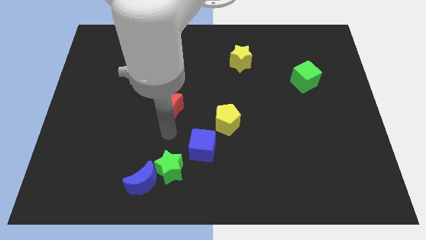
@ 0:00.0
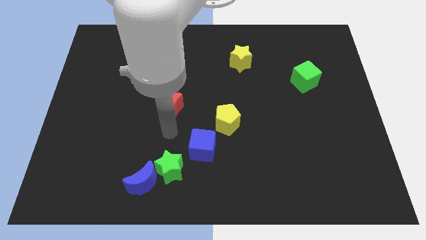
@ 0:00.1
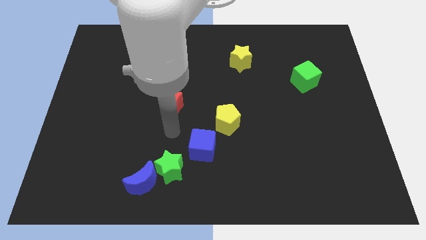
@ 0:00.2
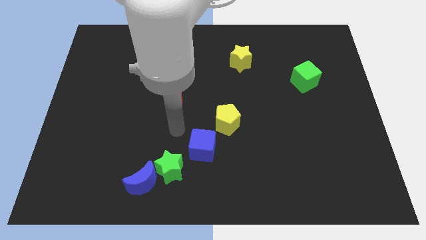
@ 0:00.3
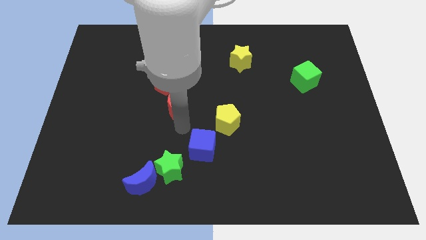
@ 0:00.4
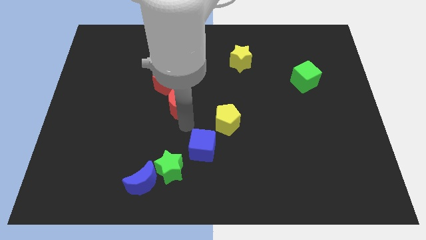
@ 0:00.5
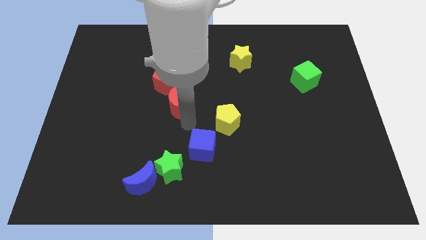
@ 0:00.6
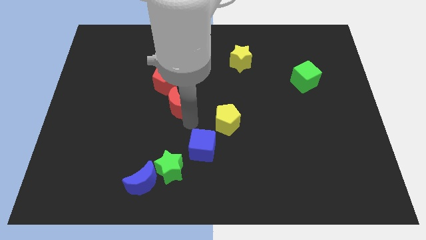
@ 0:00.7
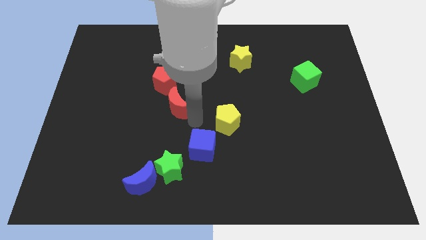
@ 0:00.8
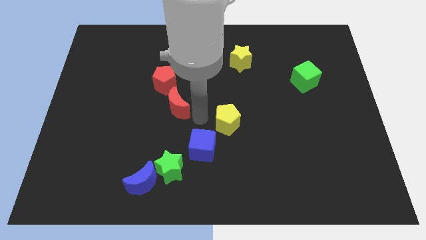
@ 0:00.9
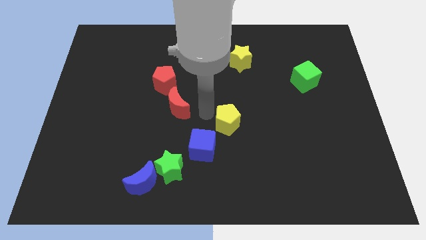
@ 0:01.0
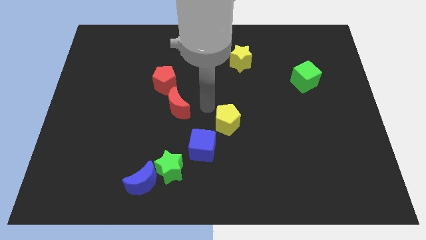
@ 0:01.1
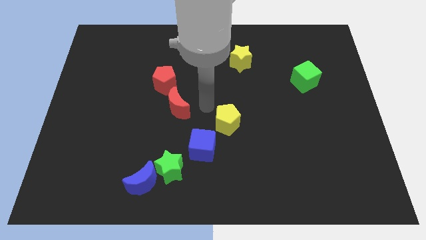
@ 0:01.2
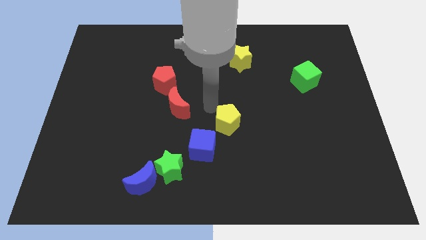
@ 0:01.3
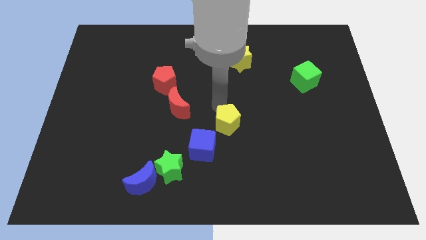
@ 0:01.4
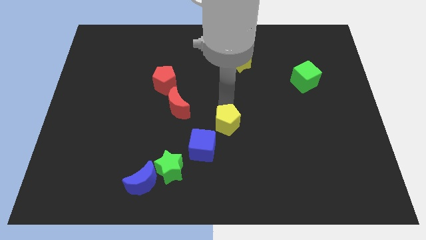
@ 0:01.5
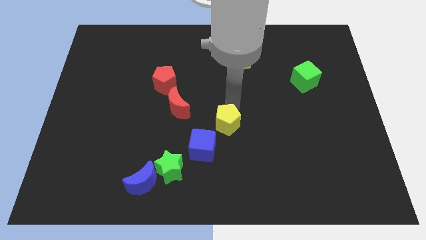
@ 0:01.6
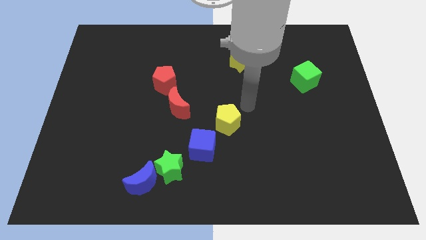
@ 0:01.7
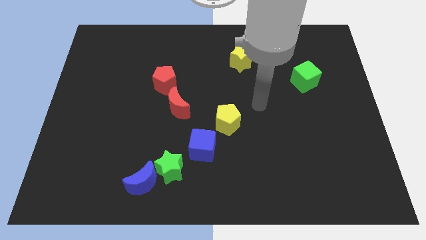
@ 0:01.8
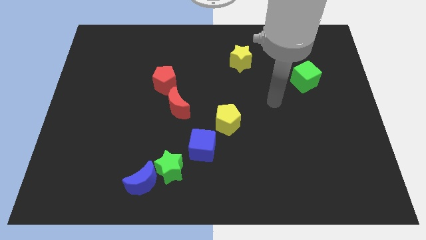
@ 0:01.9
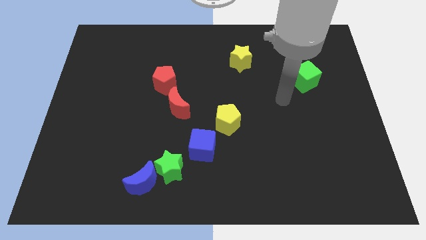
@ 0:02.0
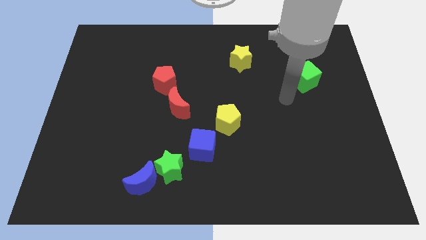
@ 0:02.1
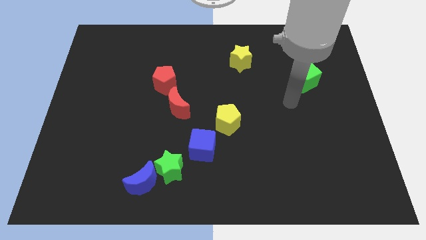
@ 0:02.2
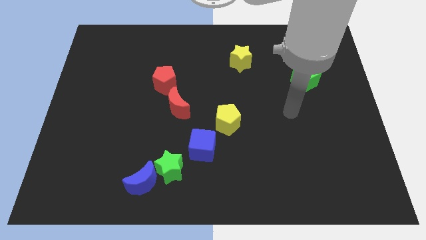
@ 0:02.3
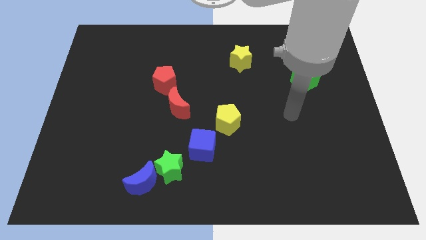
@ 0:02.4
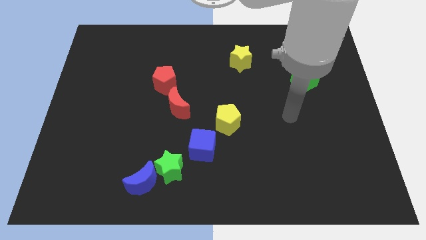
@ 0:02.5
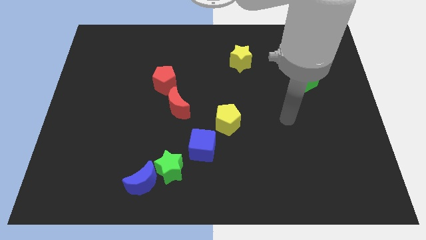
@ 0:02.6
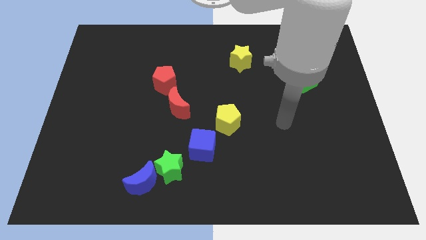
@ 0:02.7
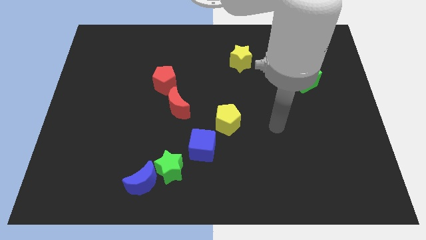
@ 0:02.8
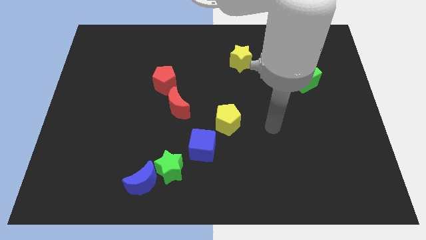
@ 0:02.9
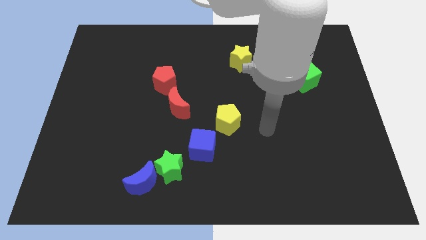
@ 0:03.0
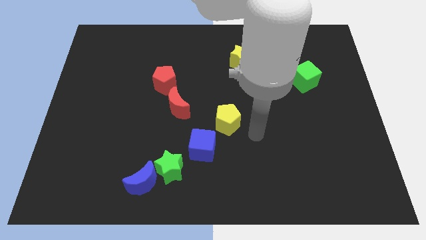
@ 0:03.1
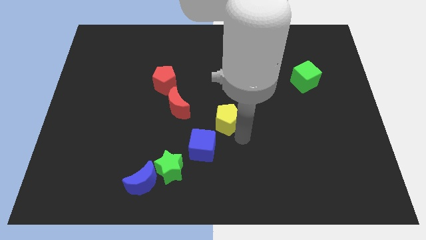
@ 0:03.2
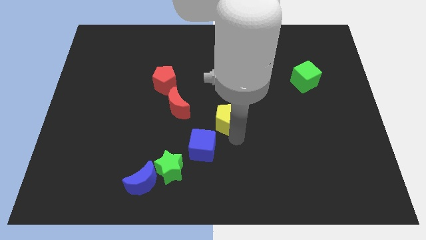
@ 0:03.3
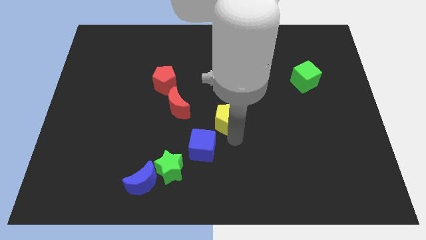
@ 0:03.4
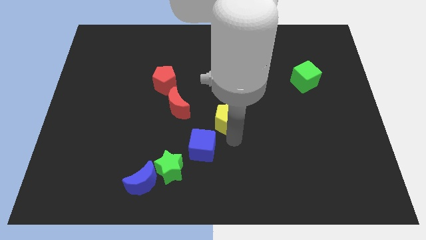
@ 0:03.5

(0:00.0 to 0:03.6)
move your arm to the bottom of the yellow pentagon

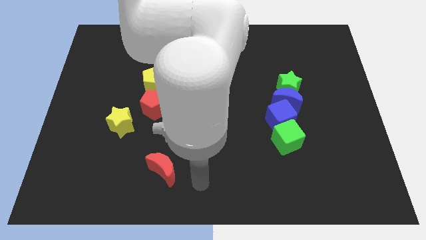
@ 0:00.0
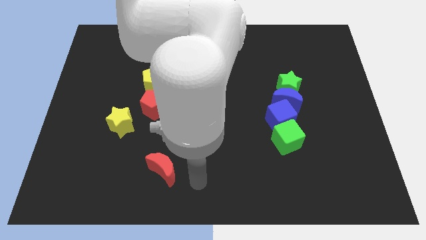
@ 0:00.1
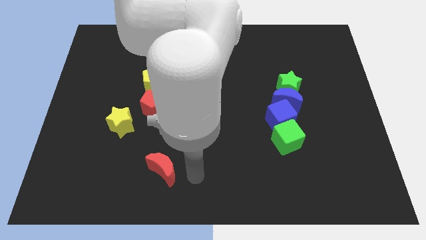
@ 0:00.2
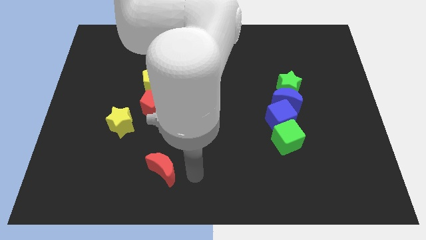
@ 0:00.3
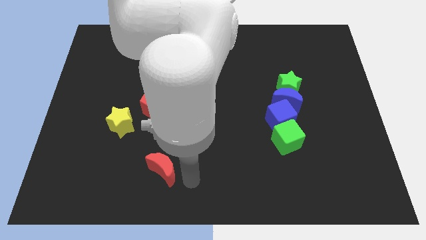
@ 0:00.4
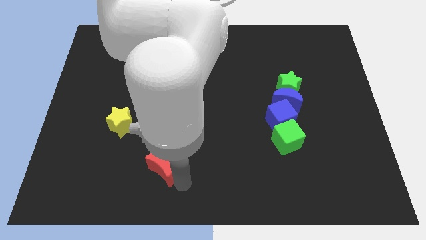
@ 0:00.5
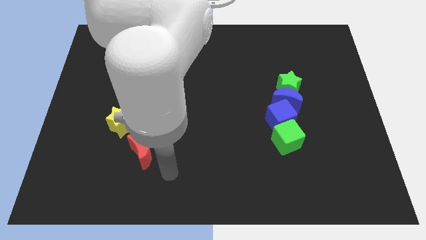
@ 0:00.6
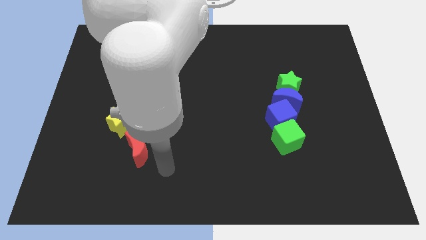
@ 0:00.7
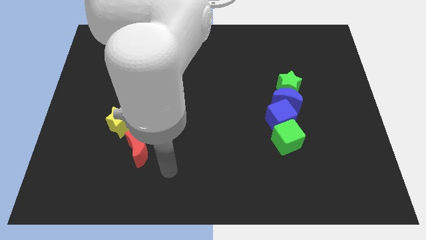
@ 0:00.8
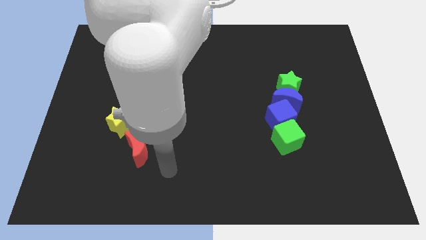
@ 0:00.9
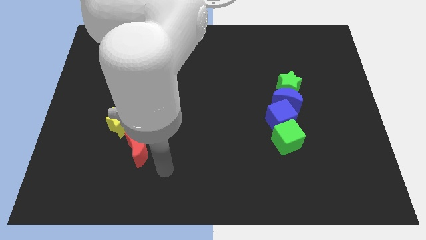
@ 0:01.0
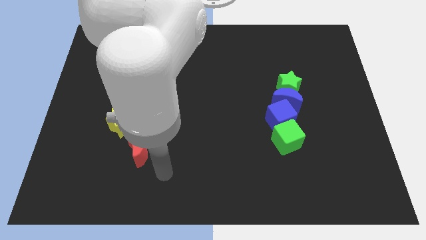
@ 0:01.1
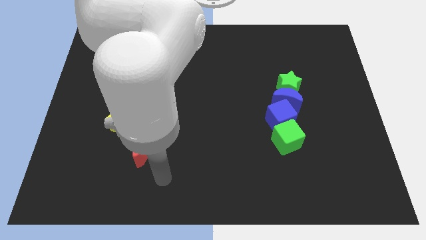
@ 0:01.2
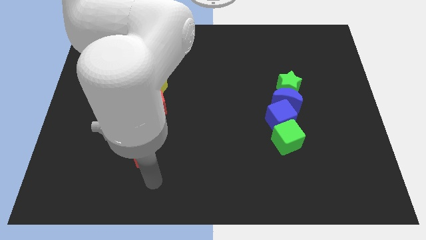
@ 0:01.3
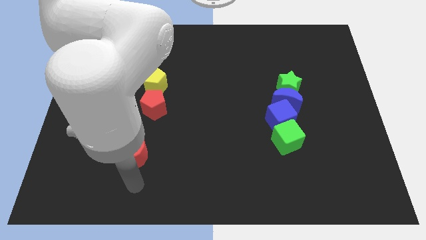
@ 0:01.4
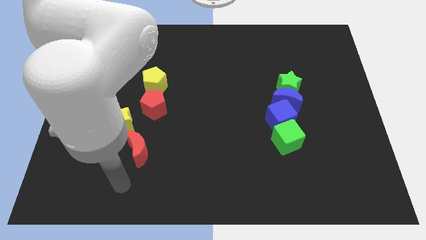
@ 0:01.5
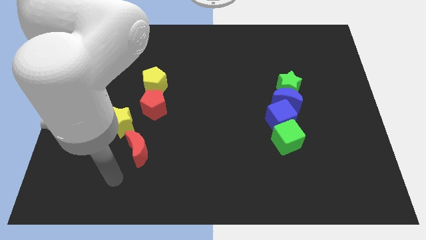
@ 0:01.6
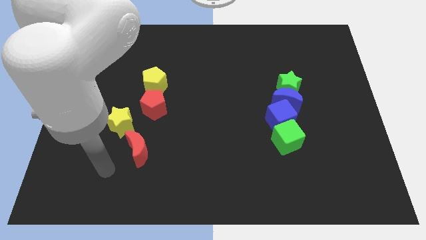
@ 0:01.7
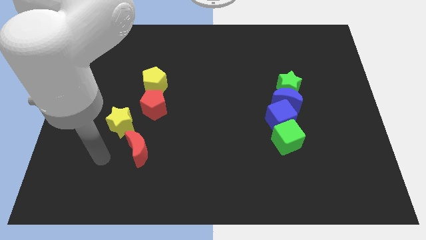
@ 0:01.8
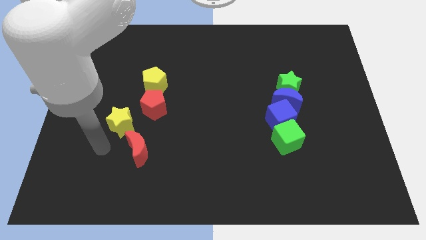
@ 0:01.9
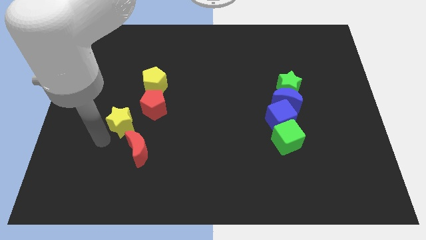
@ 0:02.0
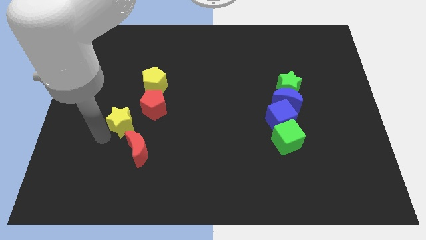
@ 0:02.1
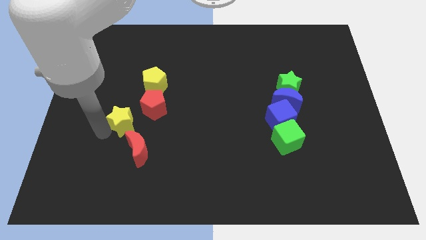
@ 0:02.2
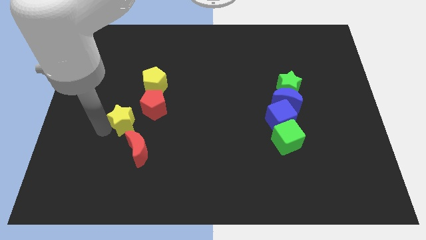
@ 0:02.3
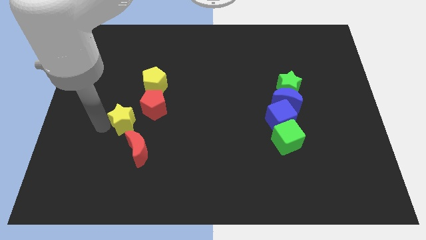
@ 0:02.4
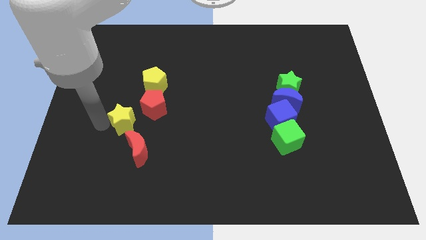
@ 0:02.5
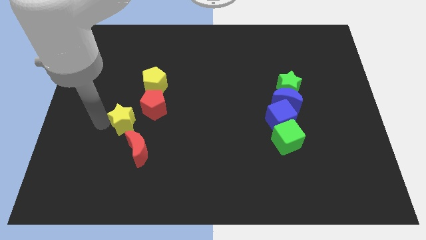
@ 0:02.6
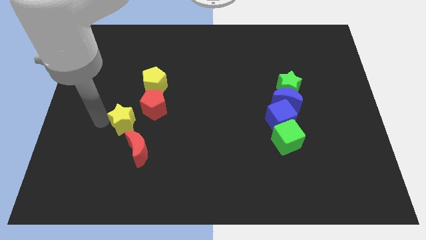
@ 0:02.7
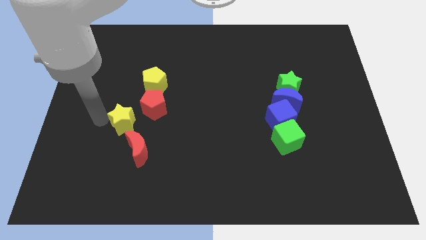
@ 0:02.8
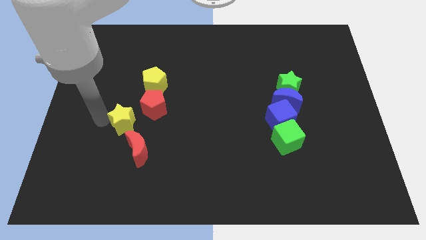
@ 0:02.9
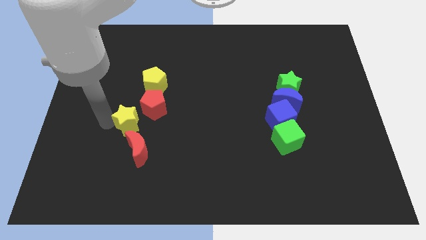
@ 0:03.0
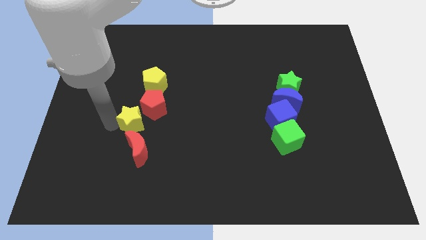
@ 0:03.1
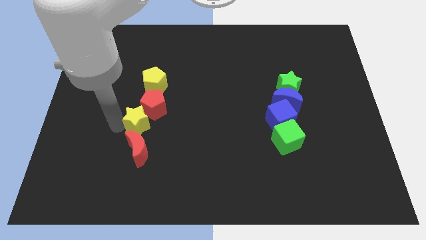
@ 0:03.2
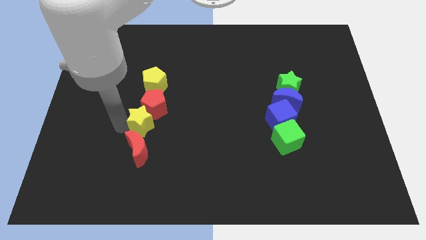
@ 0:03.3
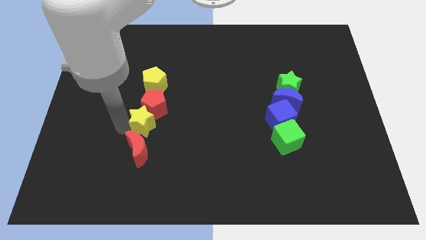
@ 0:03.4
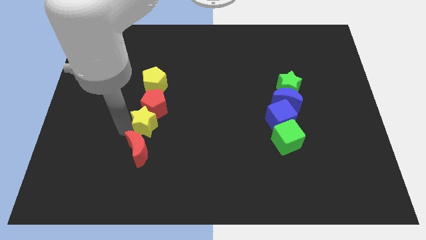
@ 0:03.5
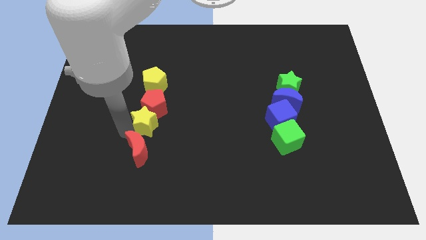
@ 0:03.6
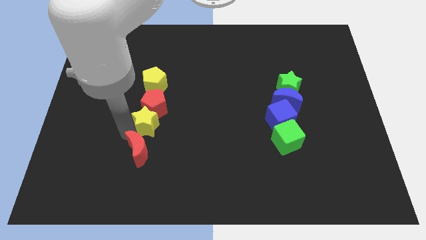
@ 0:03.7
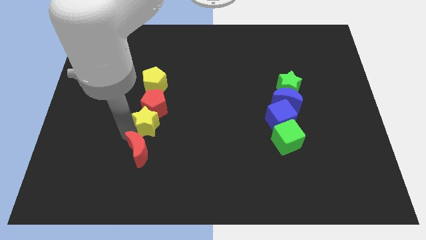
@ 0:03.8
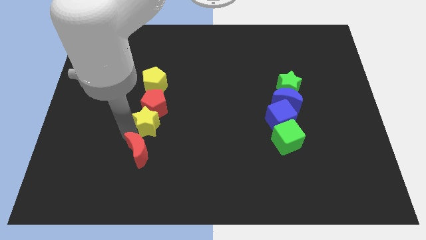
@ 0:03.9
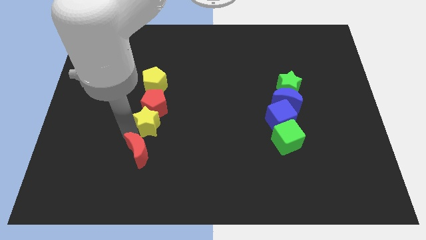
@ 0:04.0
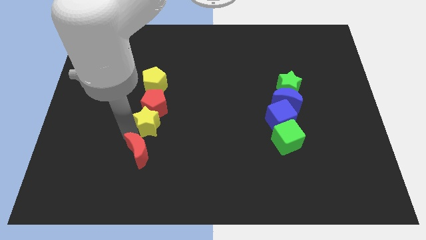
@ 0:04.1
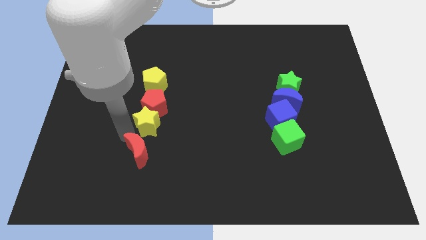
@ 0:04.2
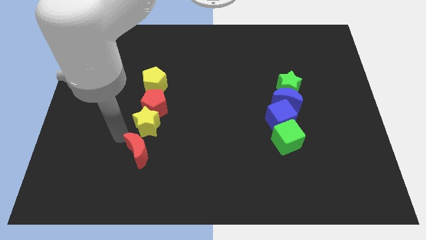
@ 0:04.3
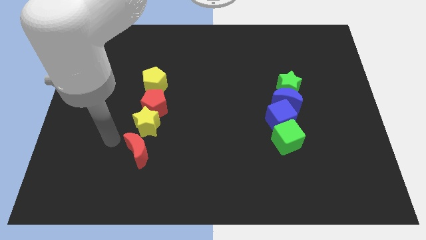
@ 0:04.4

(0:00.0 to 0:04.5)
push the yellow star to the bottom of the red pentagon

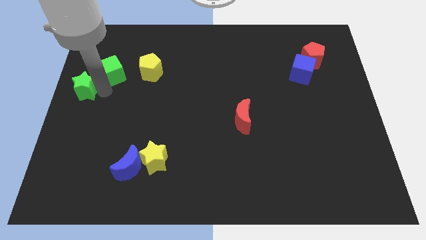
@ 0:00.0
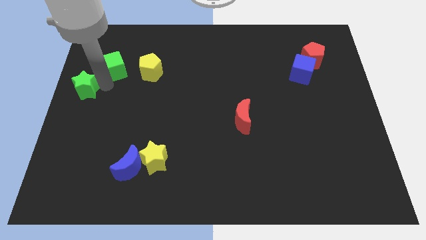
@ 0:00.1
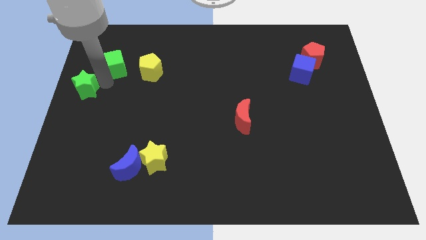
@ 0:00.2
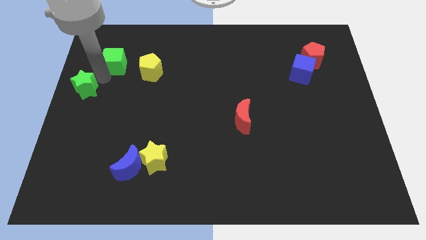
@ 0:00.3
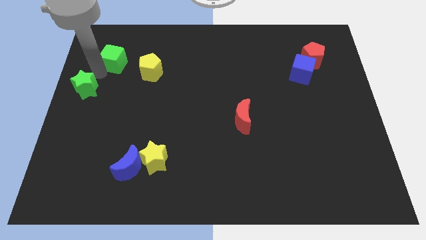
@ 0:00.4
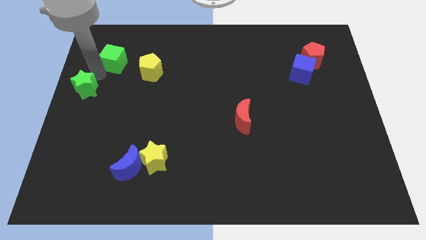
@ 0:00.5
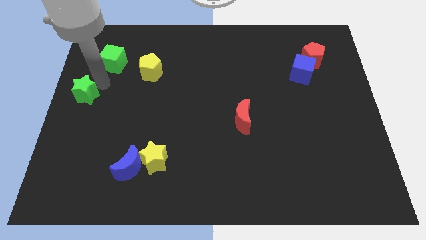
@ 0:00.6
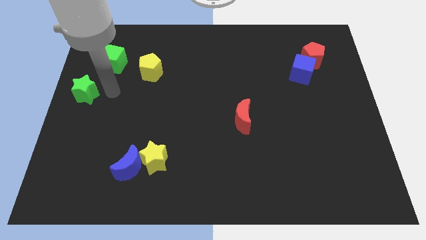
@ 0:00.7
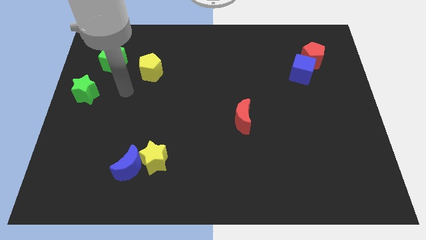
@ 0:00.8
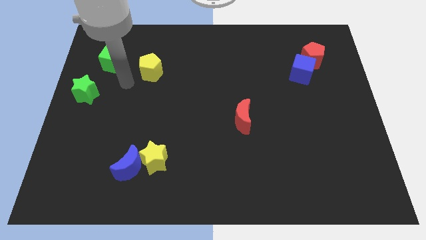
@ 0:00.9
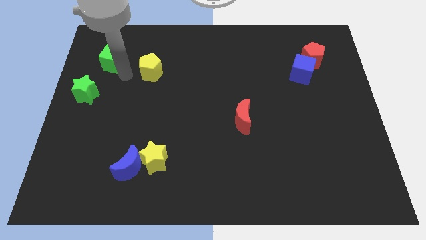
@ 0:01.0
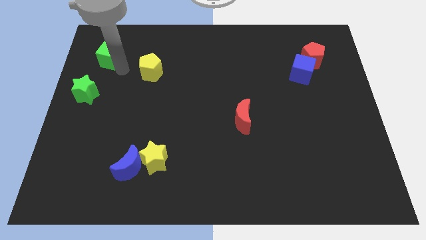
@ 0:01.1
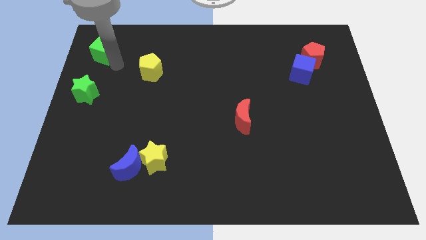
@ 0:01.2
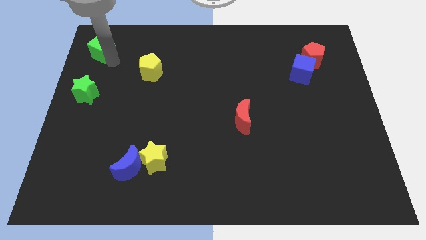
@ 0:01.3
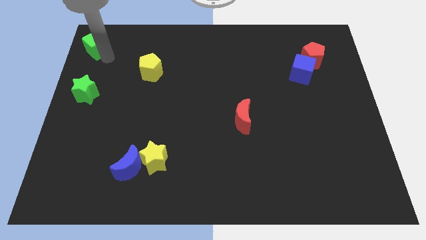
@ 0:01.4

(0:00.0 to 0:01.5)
place the green cube vertically above the green star
